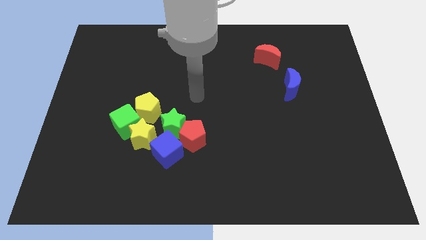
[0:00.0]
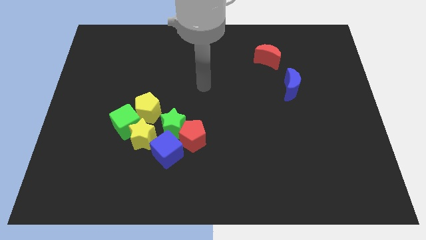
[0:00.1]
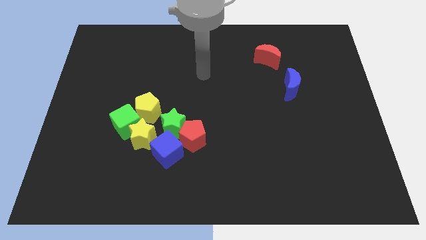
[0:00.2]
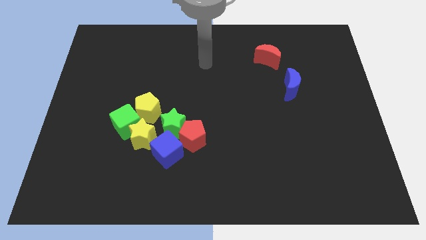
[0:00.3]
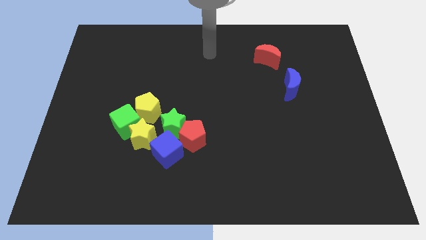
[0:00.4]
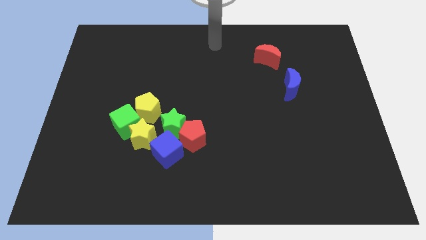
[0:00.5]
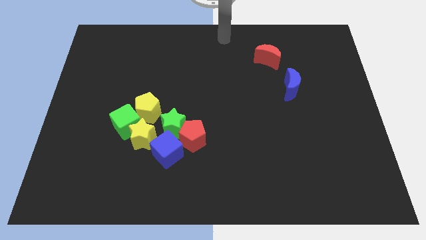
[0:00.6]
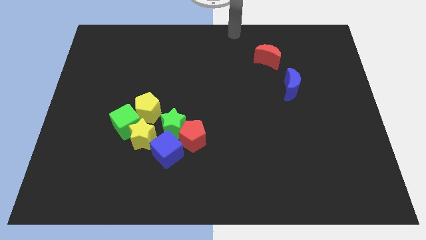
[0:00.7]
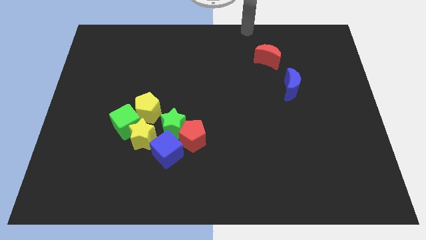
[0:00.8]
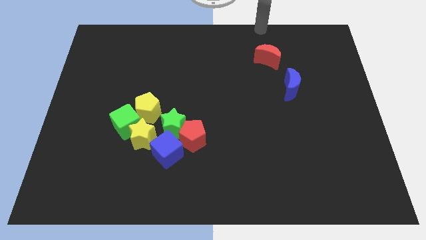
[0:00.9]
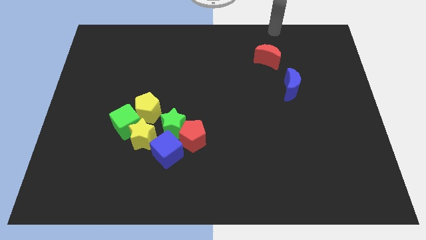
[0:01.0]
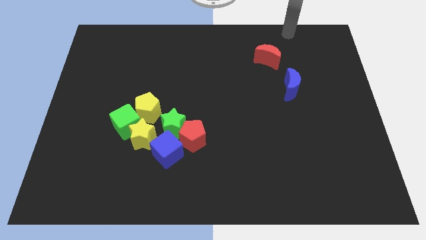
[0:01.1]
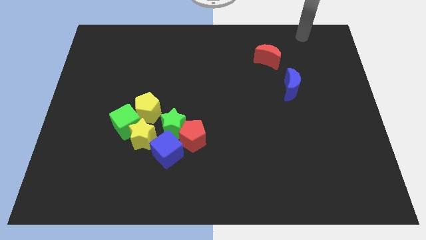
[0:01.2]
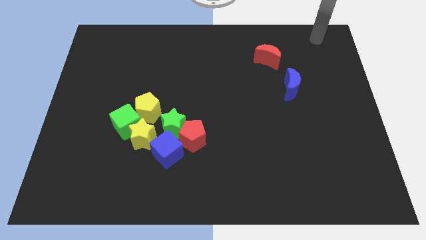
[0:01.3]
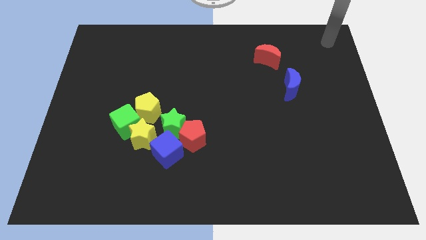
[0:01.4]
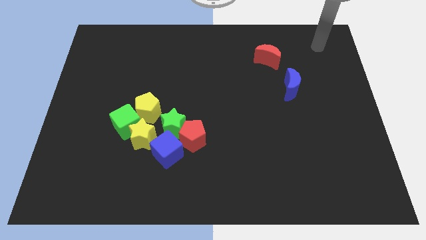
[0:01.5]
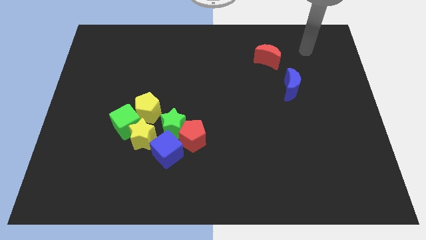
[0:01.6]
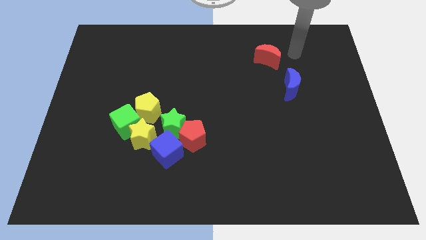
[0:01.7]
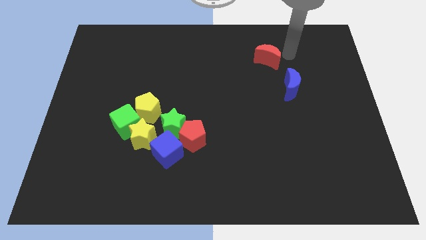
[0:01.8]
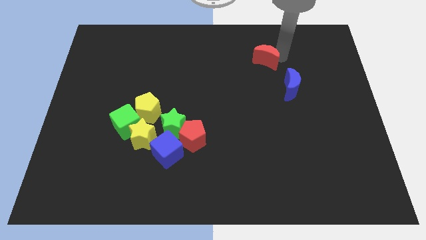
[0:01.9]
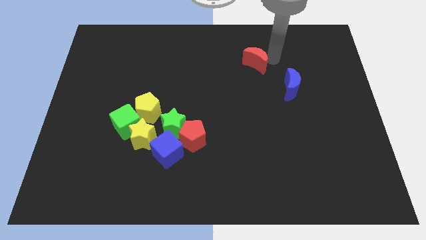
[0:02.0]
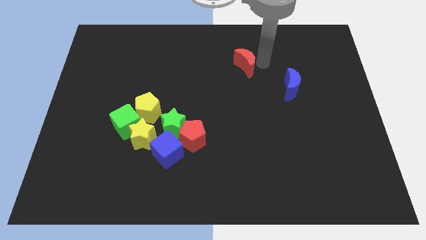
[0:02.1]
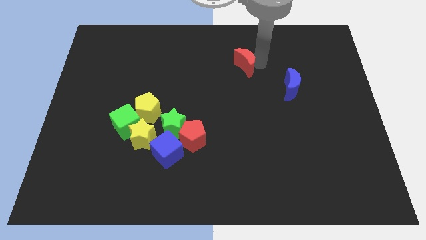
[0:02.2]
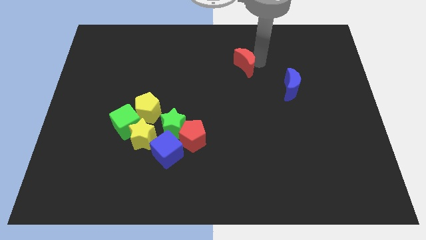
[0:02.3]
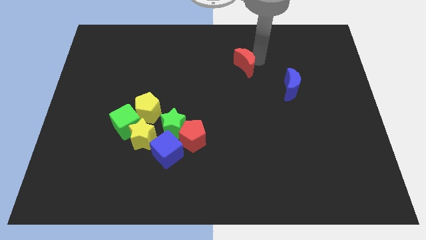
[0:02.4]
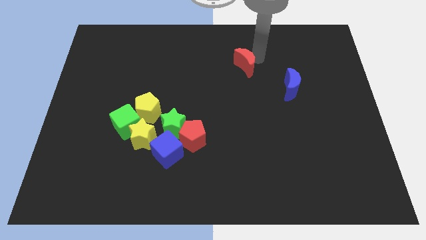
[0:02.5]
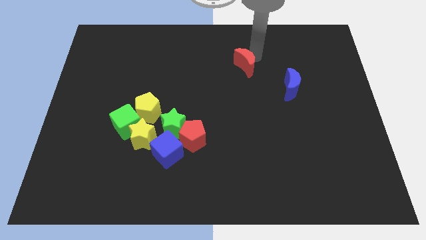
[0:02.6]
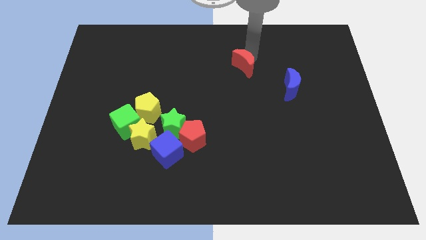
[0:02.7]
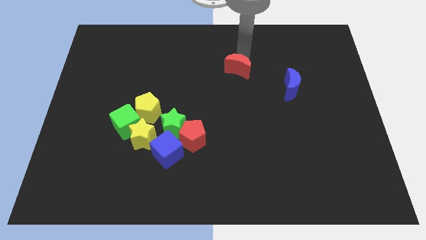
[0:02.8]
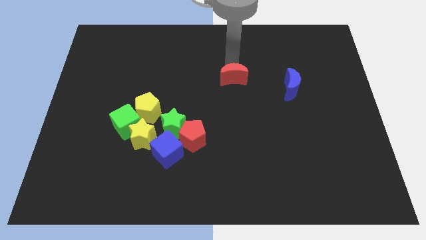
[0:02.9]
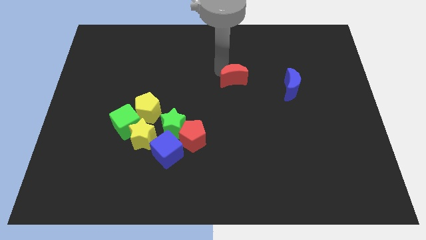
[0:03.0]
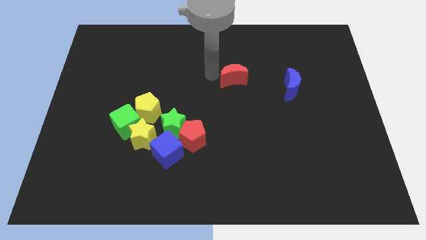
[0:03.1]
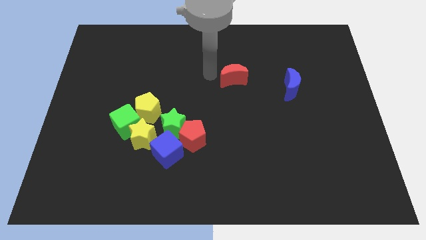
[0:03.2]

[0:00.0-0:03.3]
slide the crescent to the left side of the blue crescent

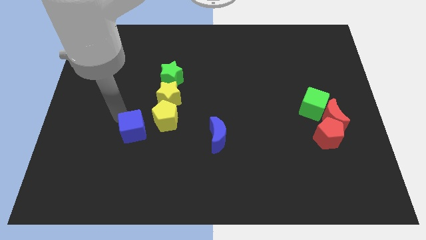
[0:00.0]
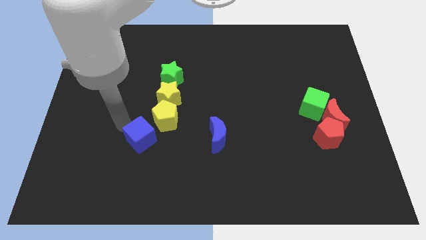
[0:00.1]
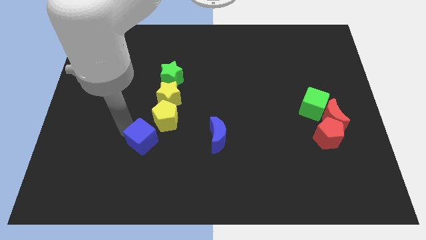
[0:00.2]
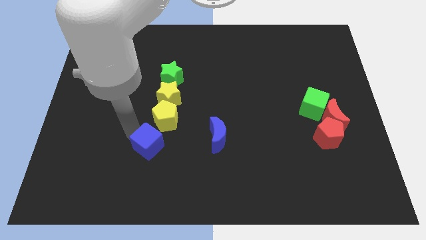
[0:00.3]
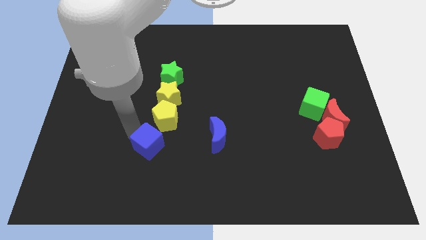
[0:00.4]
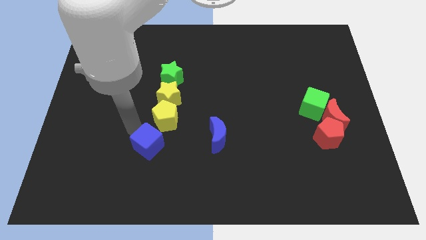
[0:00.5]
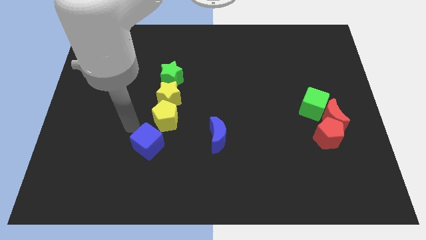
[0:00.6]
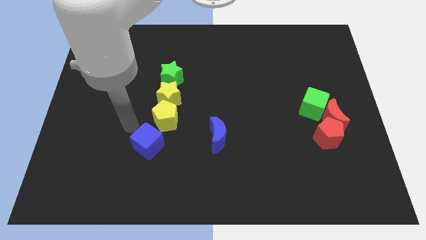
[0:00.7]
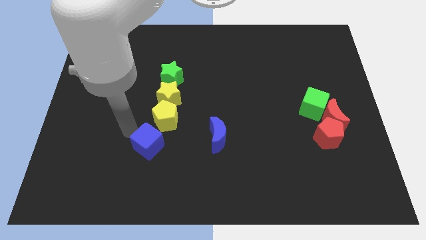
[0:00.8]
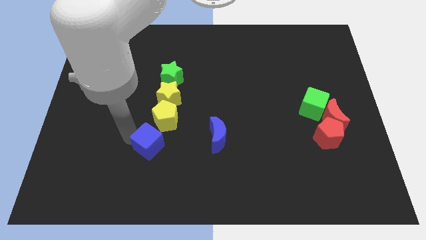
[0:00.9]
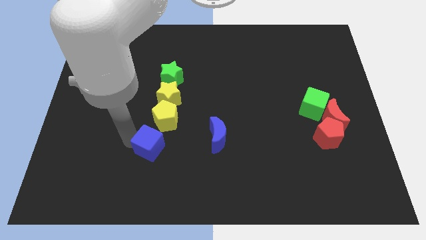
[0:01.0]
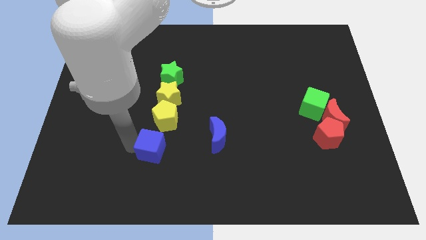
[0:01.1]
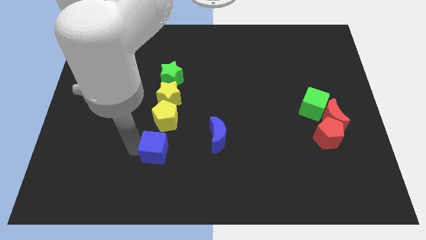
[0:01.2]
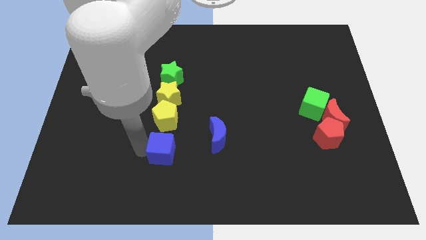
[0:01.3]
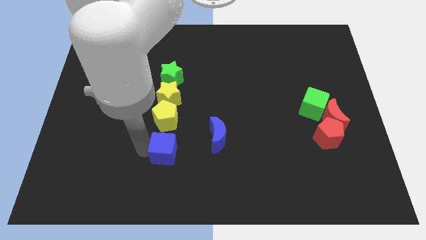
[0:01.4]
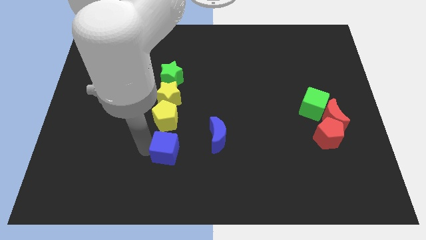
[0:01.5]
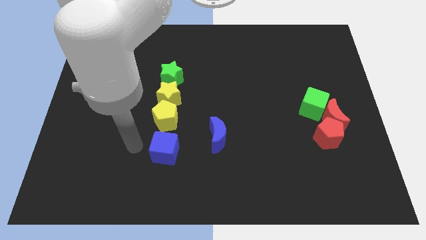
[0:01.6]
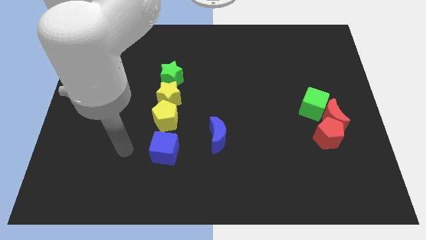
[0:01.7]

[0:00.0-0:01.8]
move the blue cube to the bottom side of the yellow pentagon

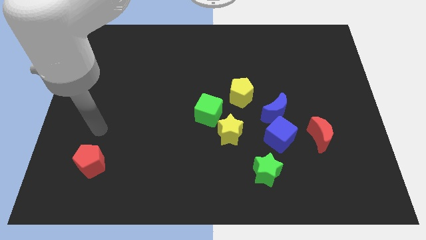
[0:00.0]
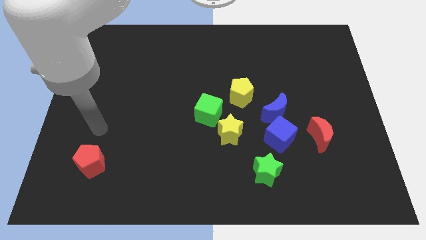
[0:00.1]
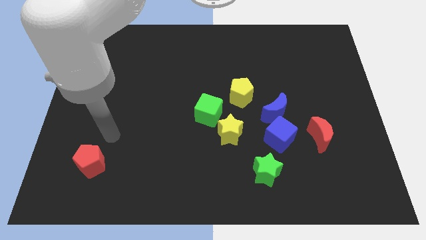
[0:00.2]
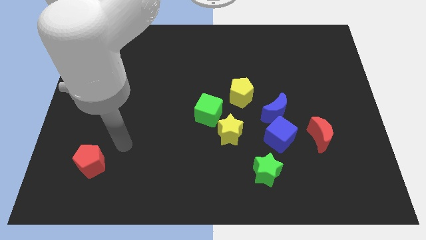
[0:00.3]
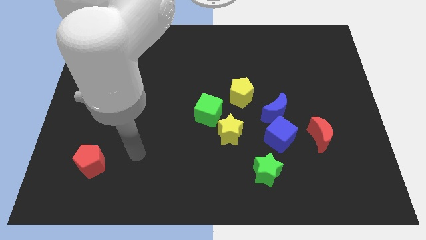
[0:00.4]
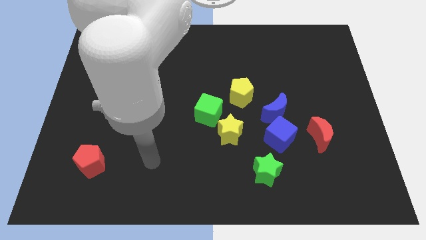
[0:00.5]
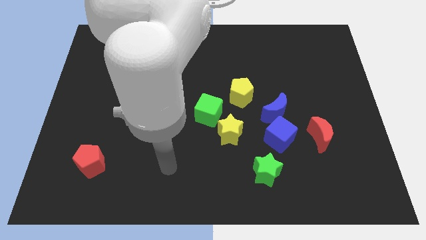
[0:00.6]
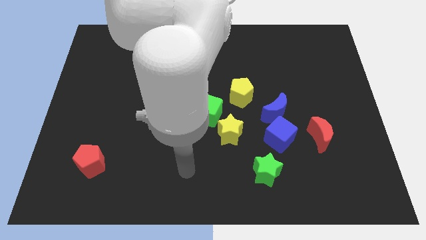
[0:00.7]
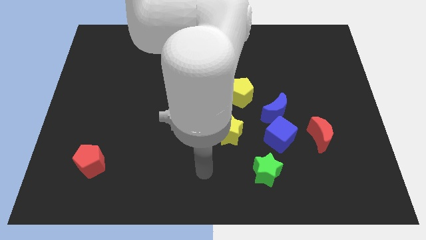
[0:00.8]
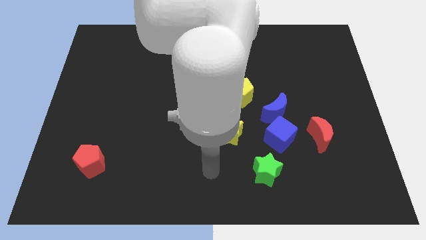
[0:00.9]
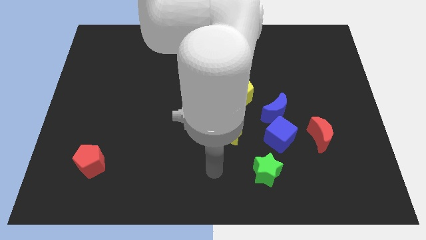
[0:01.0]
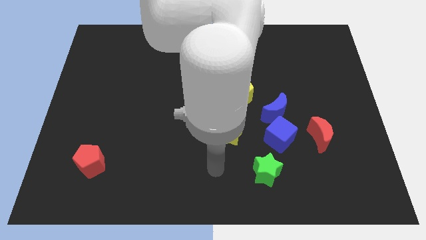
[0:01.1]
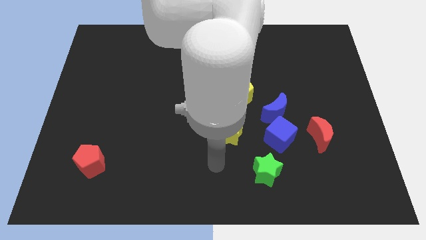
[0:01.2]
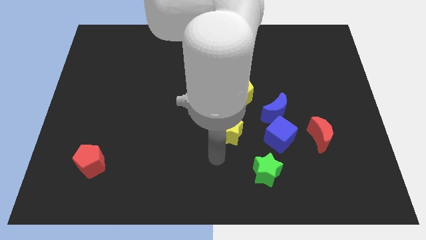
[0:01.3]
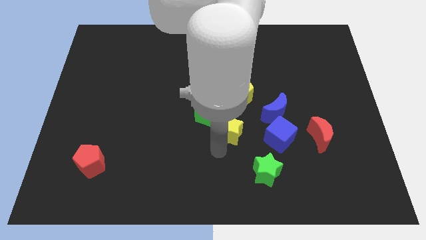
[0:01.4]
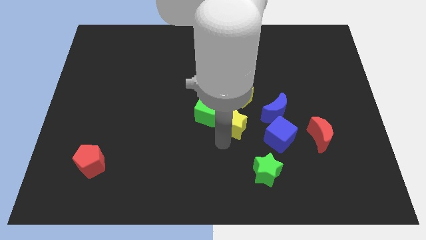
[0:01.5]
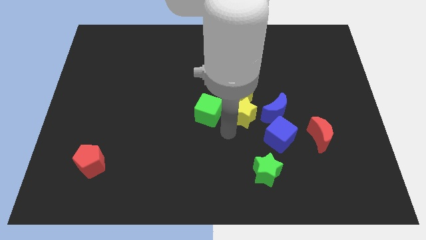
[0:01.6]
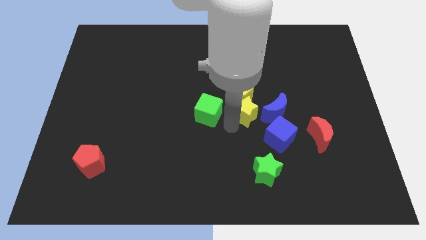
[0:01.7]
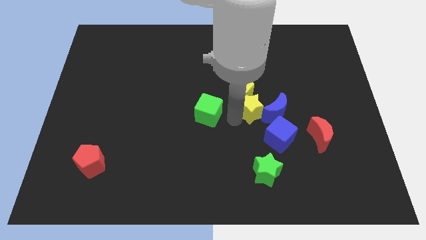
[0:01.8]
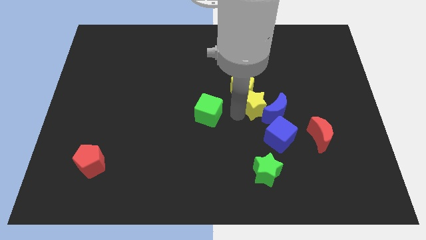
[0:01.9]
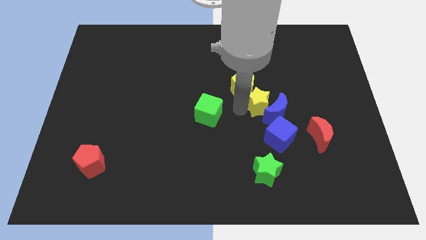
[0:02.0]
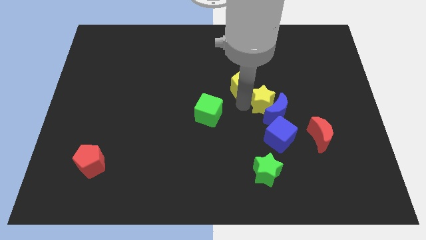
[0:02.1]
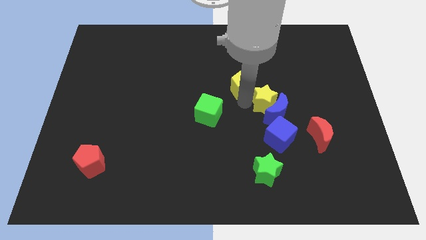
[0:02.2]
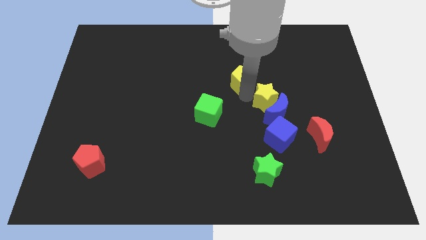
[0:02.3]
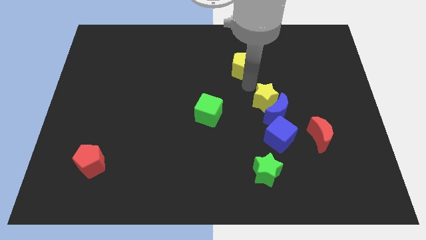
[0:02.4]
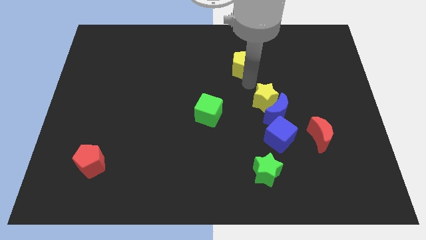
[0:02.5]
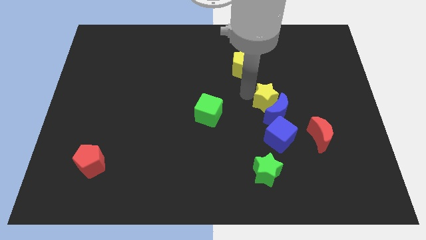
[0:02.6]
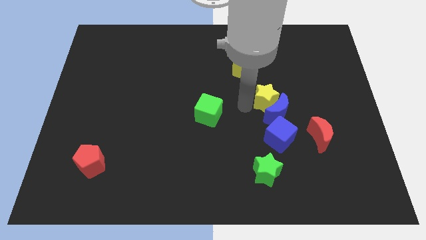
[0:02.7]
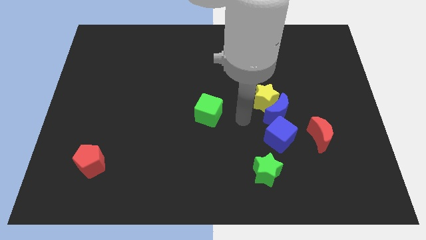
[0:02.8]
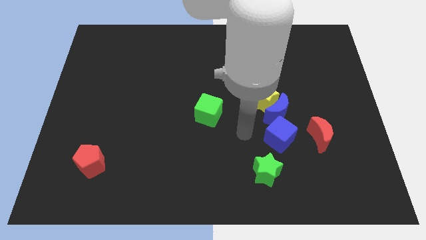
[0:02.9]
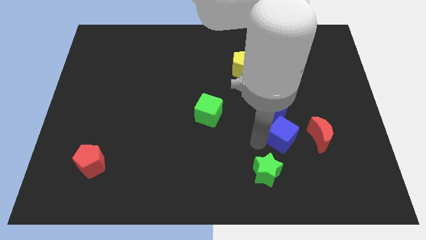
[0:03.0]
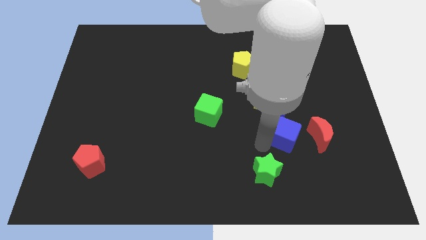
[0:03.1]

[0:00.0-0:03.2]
push the yellow star into the yellow pentagon and separate them

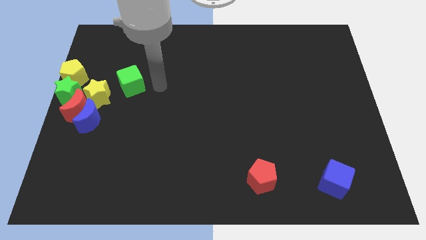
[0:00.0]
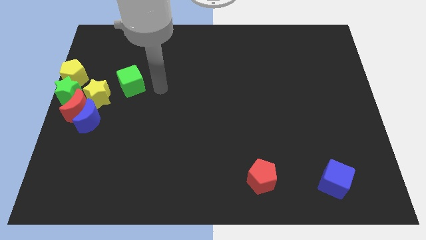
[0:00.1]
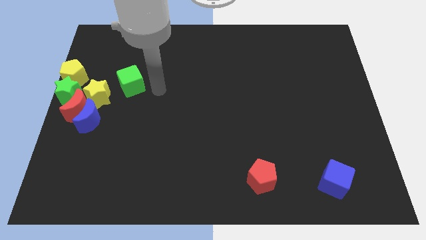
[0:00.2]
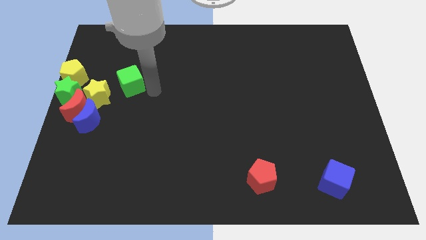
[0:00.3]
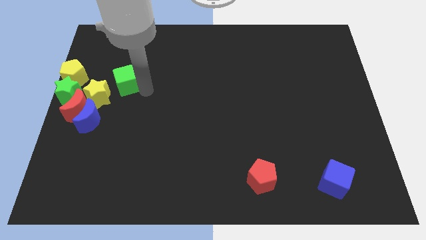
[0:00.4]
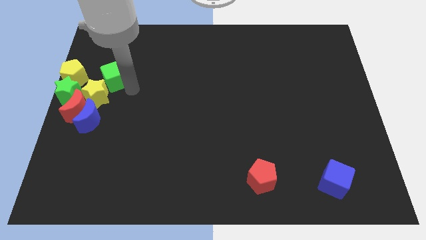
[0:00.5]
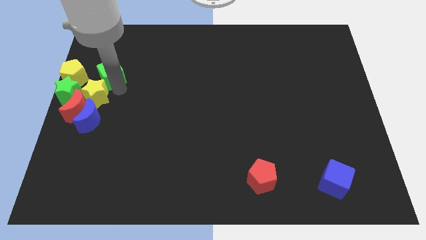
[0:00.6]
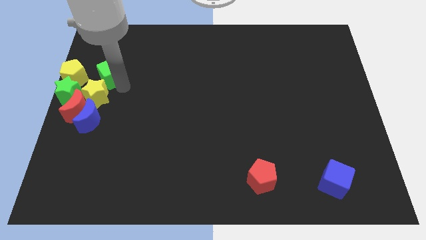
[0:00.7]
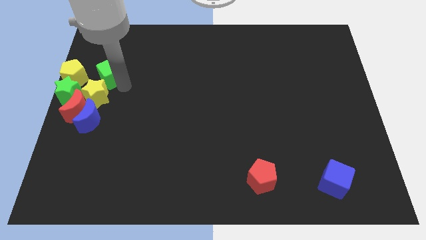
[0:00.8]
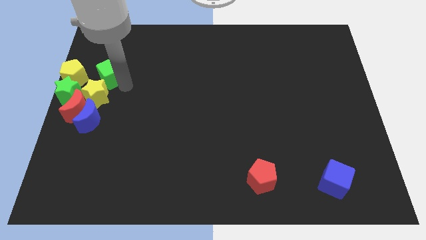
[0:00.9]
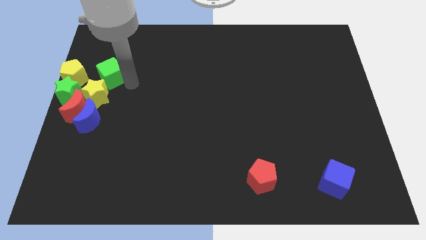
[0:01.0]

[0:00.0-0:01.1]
push the green cube into the yellow star
